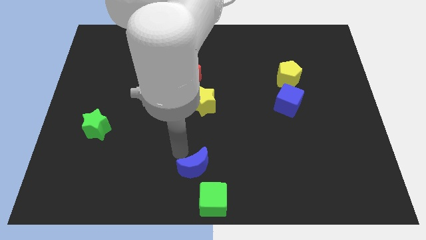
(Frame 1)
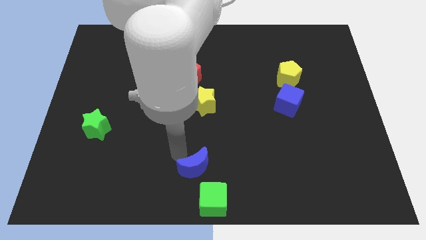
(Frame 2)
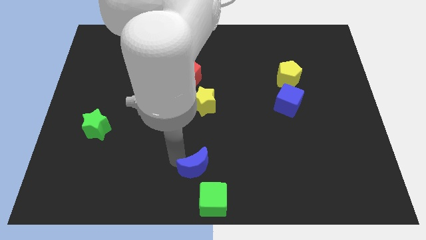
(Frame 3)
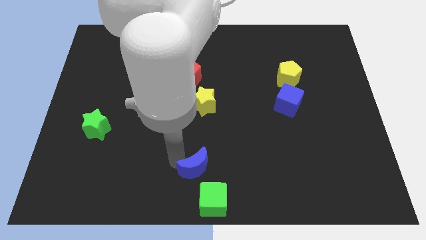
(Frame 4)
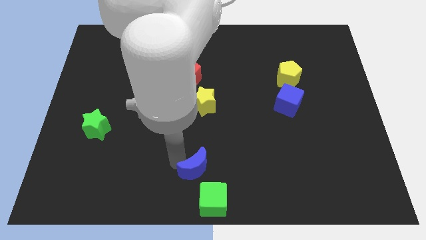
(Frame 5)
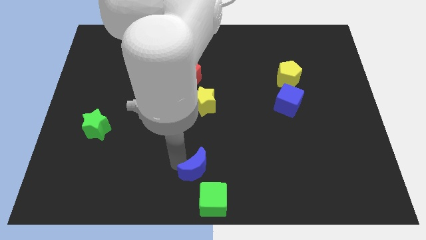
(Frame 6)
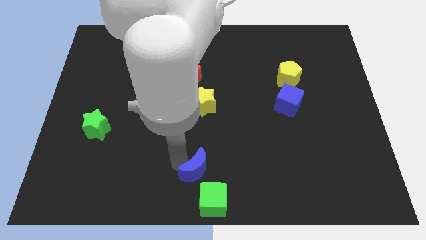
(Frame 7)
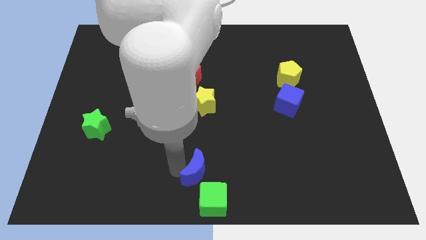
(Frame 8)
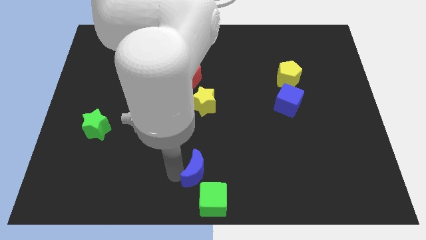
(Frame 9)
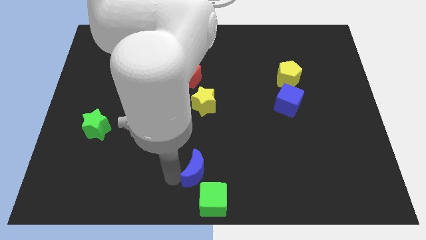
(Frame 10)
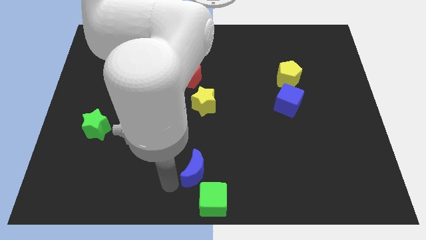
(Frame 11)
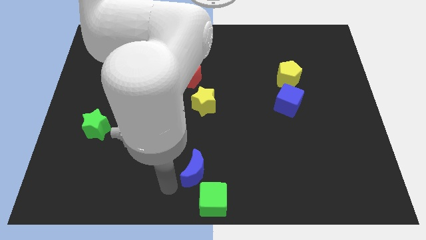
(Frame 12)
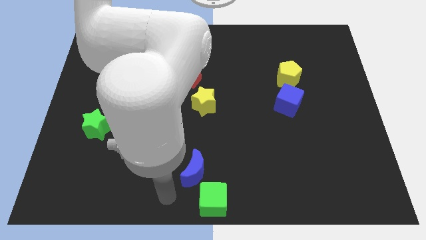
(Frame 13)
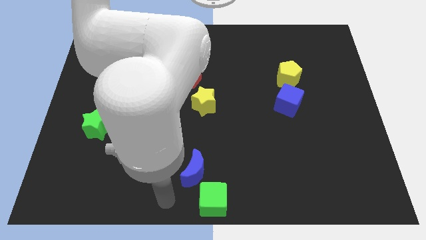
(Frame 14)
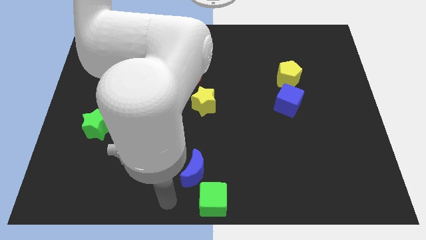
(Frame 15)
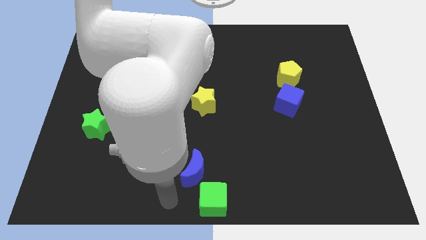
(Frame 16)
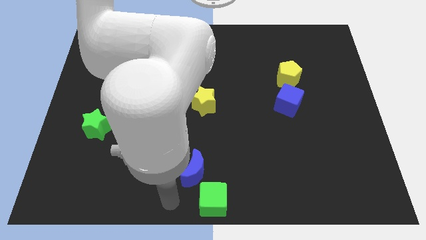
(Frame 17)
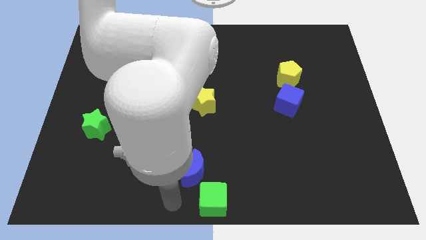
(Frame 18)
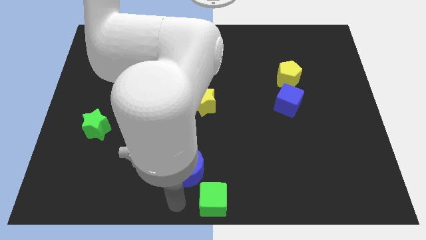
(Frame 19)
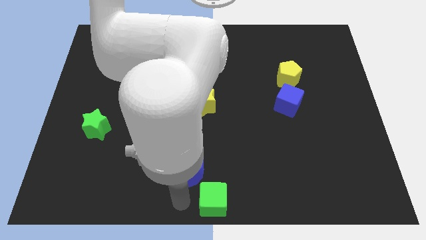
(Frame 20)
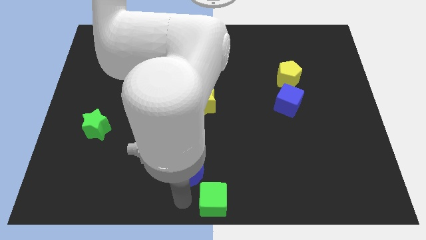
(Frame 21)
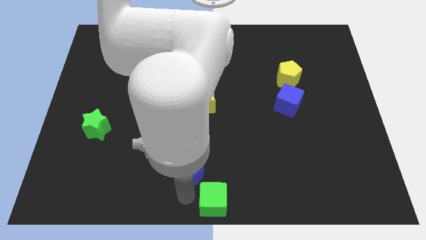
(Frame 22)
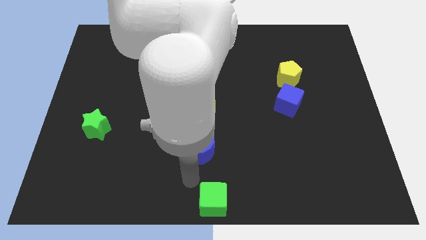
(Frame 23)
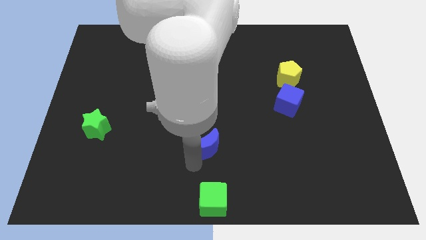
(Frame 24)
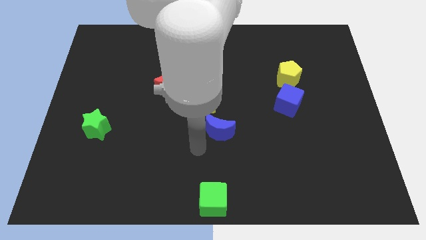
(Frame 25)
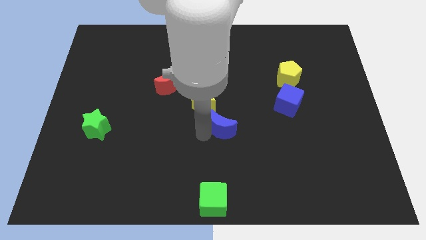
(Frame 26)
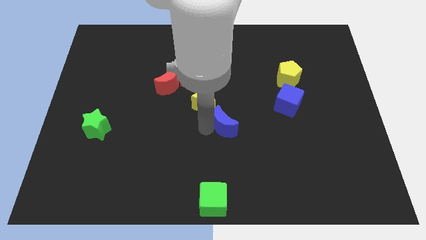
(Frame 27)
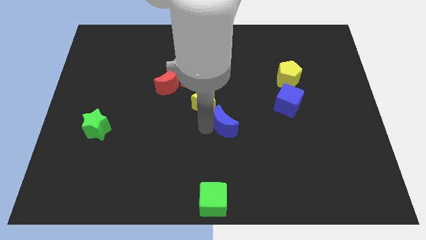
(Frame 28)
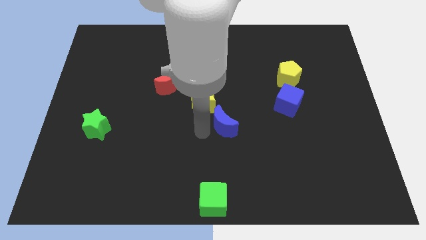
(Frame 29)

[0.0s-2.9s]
place the blue crescent close to yellow star

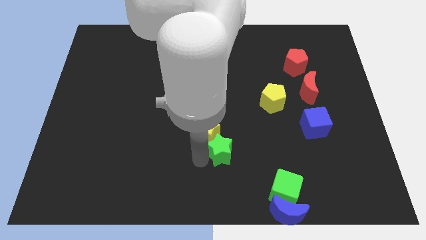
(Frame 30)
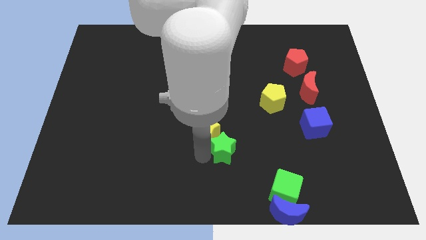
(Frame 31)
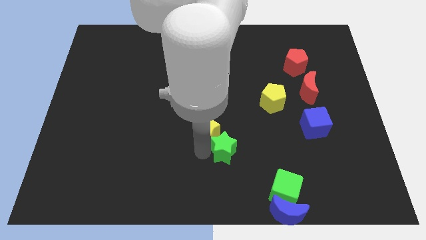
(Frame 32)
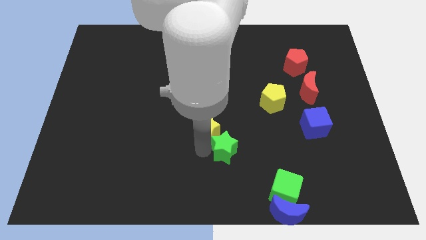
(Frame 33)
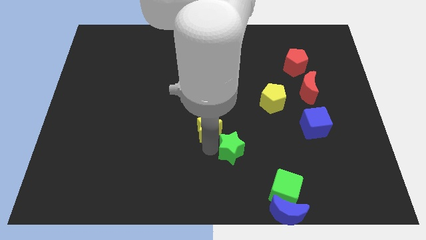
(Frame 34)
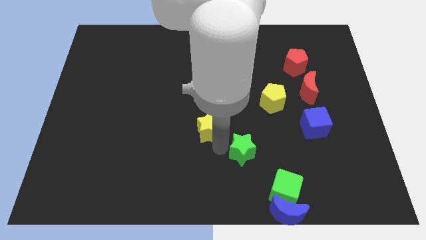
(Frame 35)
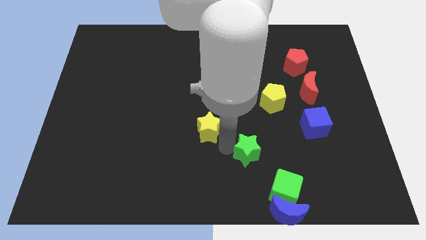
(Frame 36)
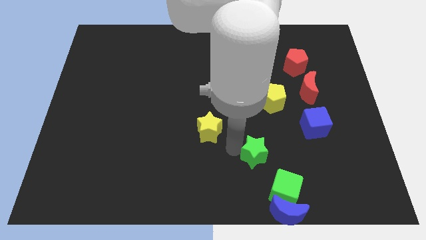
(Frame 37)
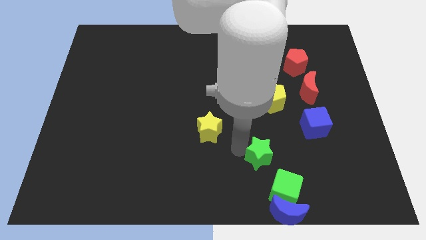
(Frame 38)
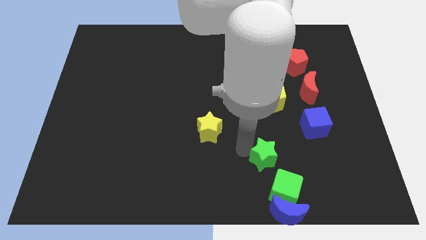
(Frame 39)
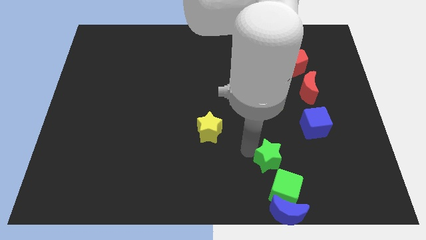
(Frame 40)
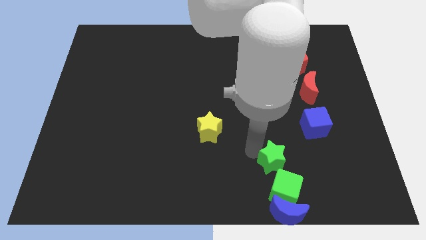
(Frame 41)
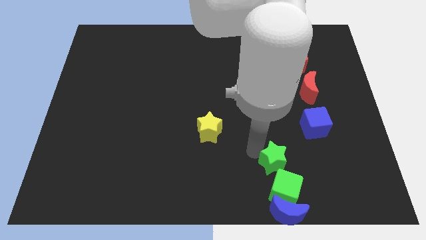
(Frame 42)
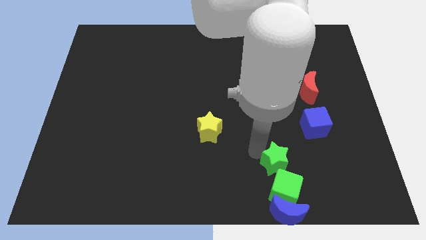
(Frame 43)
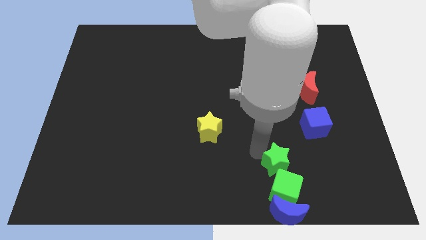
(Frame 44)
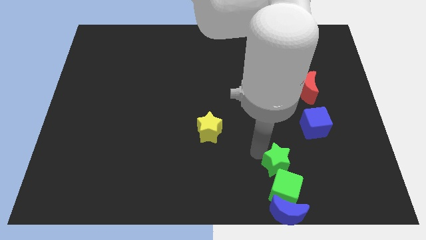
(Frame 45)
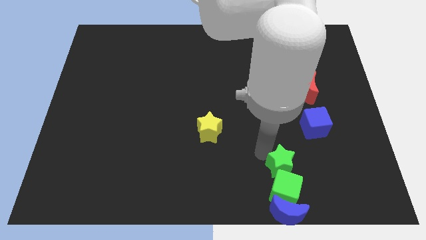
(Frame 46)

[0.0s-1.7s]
move the green star to the top of the green cube

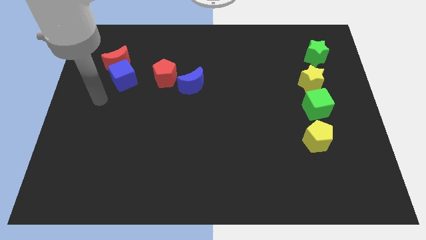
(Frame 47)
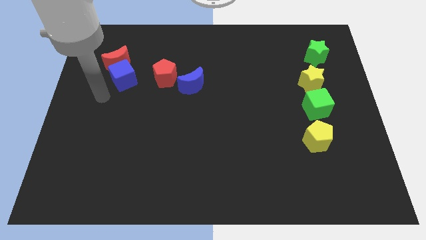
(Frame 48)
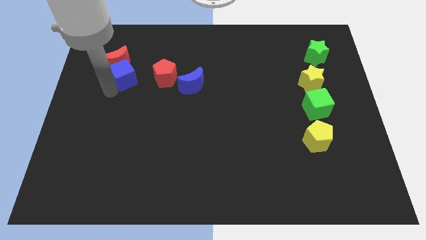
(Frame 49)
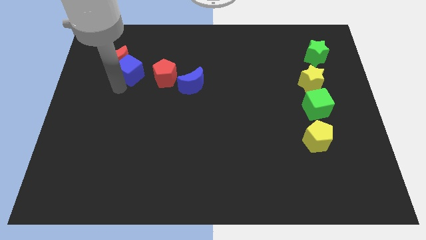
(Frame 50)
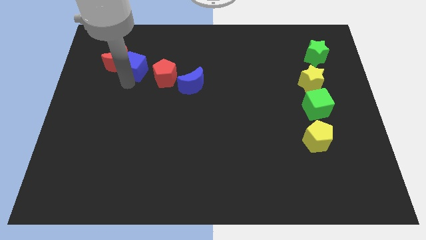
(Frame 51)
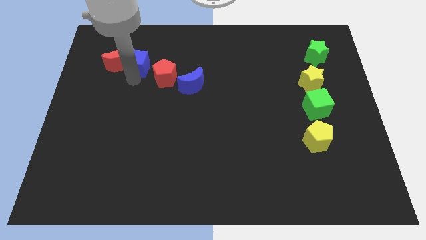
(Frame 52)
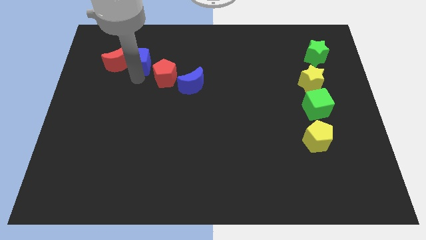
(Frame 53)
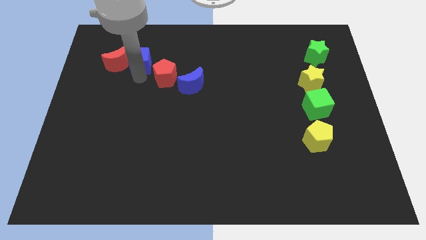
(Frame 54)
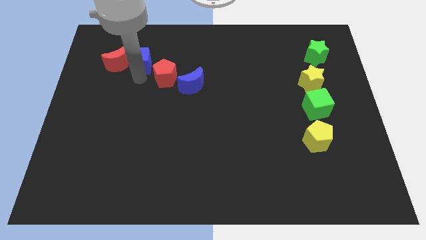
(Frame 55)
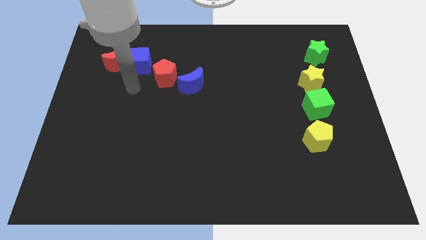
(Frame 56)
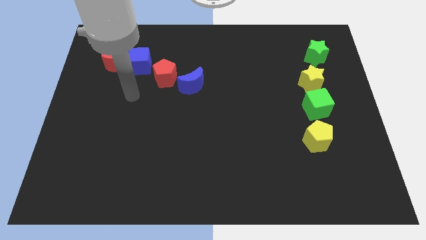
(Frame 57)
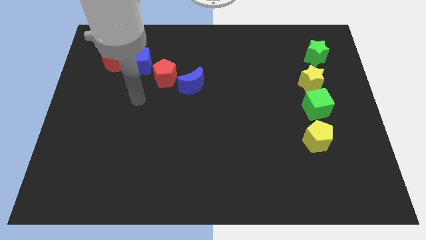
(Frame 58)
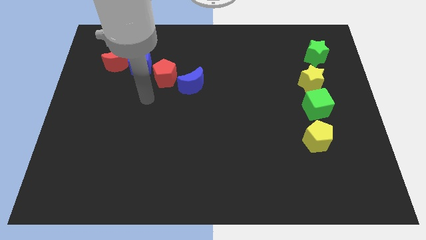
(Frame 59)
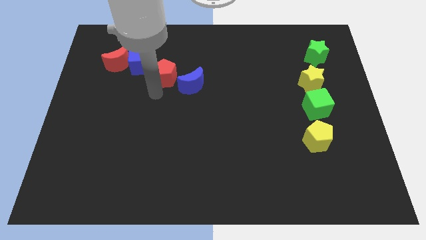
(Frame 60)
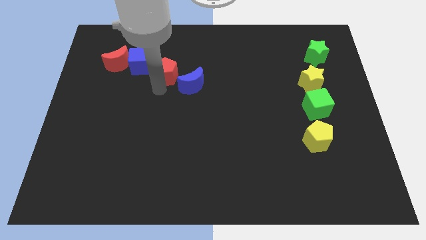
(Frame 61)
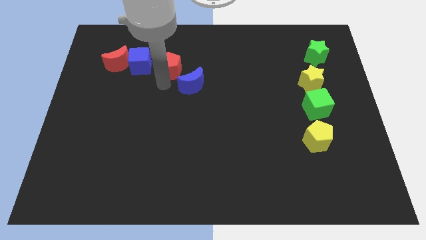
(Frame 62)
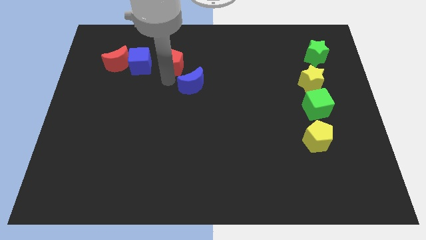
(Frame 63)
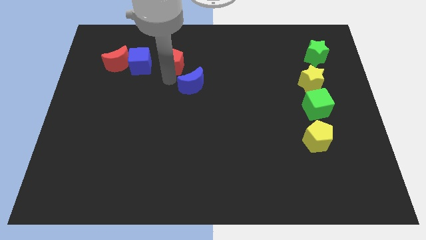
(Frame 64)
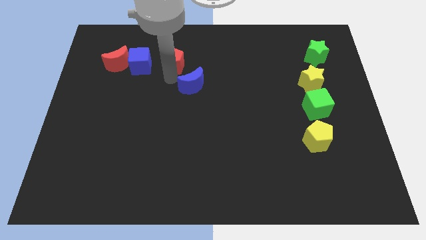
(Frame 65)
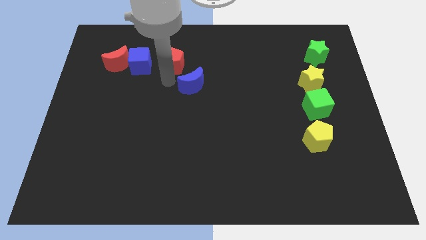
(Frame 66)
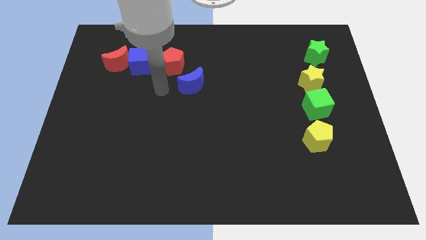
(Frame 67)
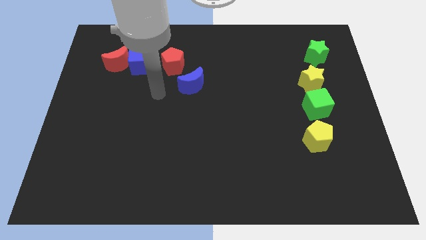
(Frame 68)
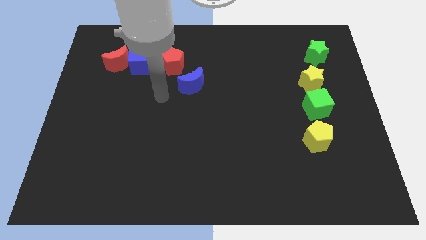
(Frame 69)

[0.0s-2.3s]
move the blue cube right to the red moon

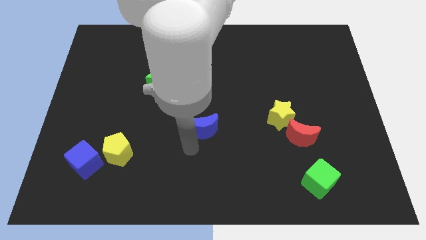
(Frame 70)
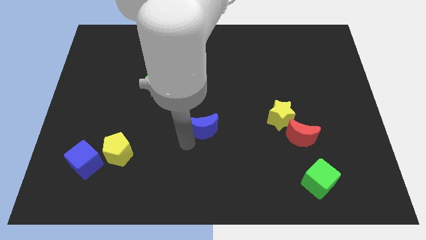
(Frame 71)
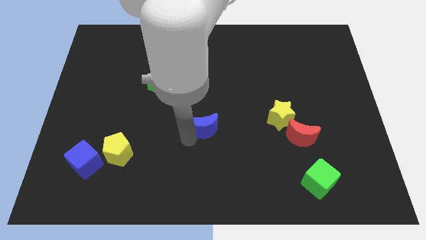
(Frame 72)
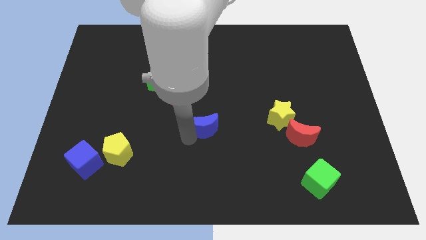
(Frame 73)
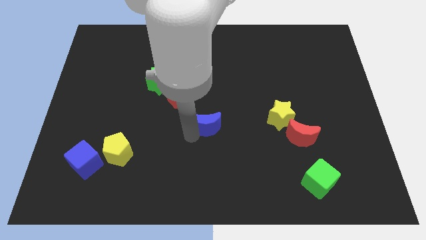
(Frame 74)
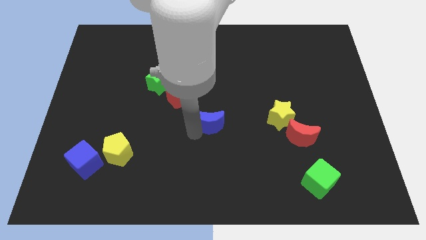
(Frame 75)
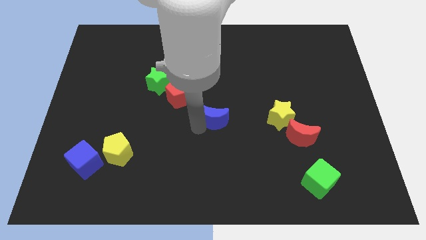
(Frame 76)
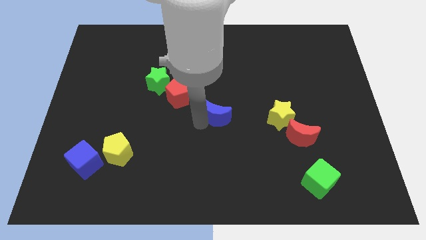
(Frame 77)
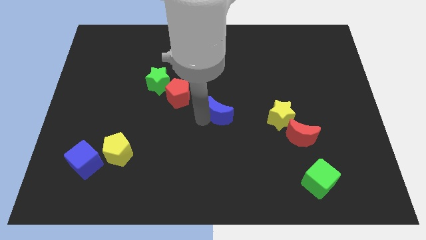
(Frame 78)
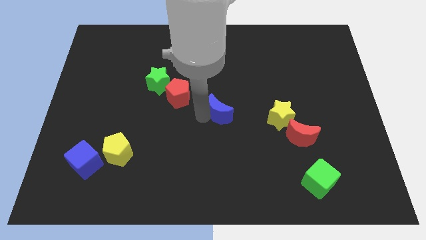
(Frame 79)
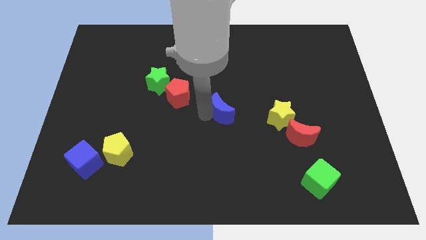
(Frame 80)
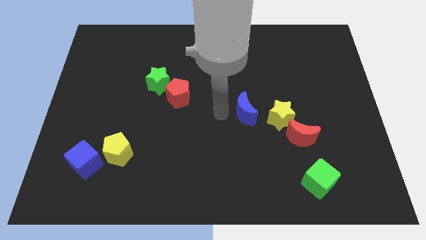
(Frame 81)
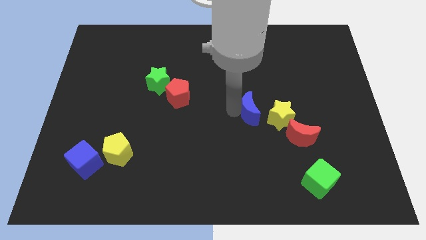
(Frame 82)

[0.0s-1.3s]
place the blue moon beside the red pentagon to form a line

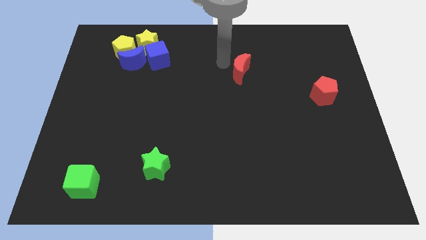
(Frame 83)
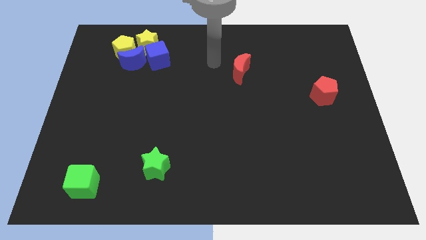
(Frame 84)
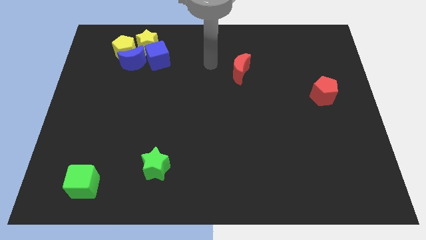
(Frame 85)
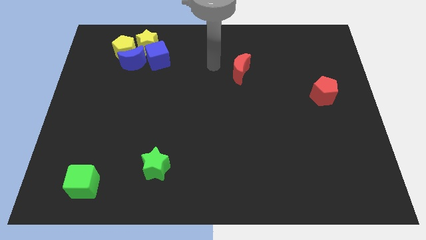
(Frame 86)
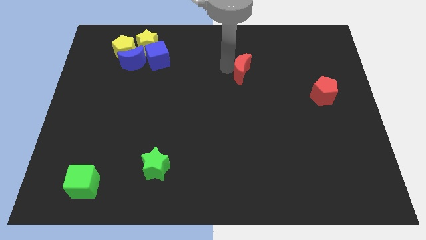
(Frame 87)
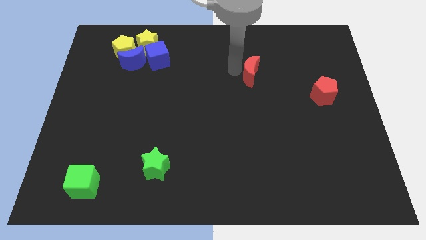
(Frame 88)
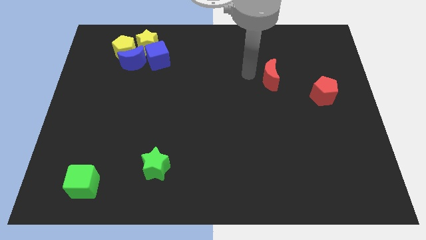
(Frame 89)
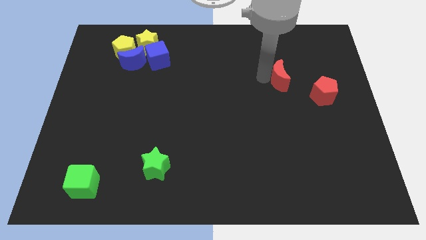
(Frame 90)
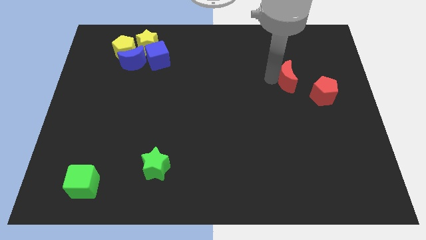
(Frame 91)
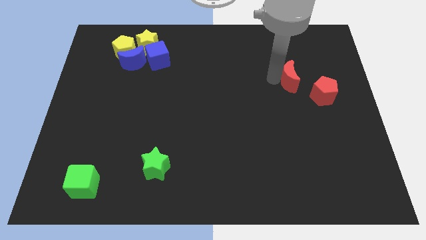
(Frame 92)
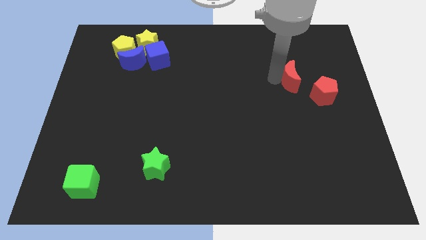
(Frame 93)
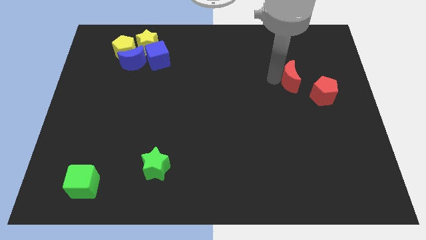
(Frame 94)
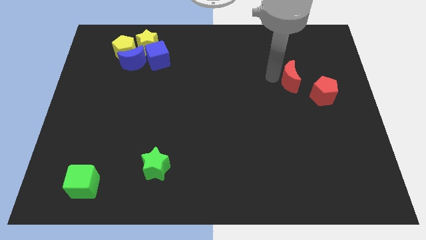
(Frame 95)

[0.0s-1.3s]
move red moon top left of the red pentagon
